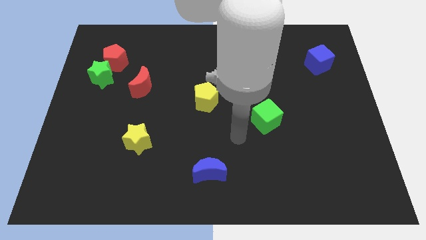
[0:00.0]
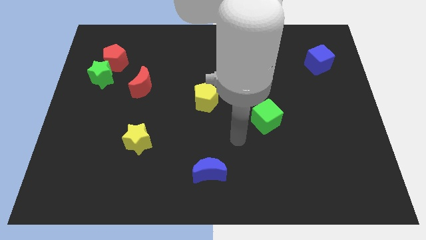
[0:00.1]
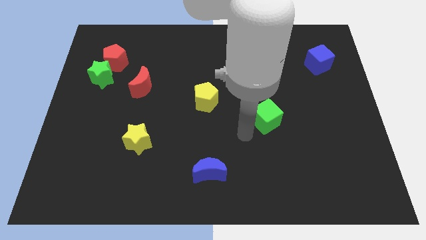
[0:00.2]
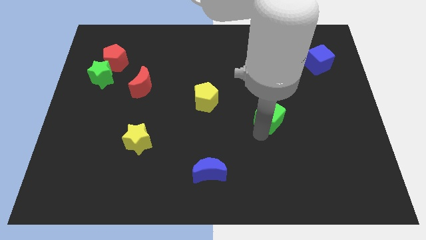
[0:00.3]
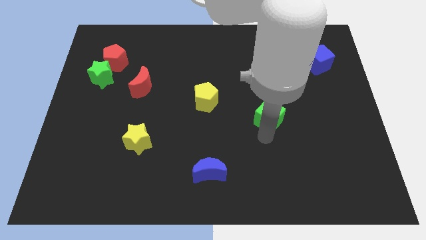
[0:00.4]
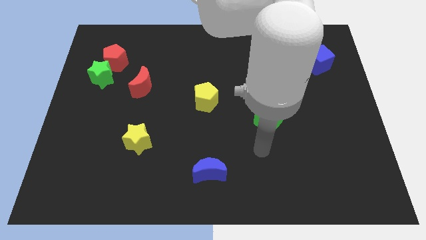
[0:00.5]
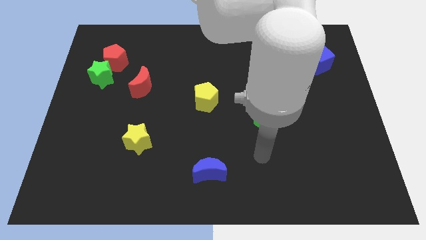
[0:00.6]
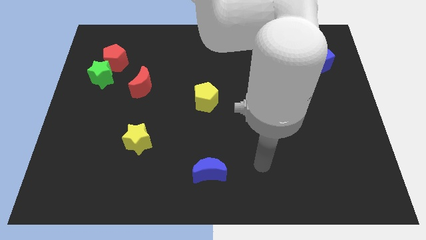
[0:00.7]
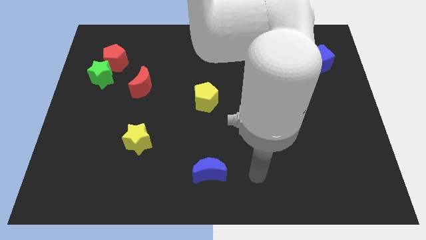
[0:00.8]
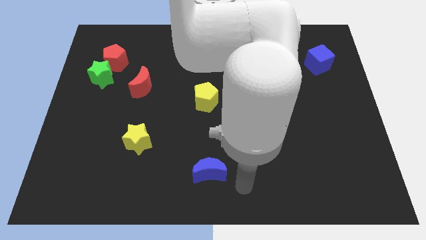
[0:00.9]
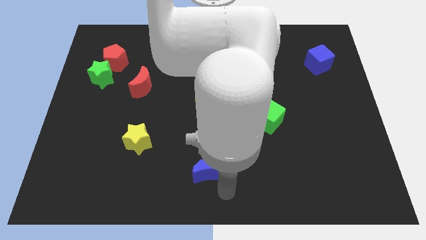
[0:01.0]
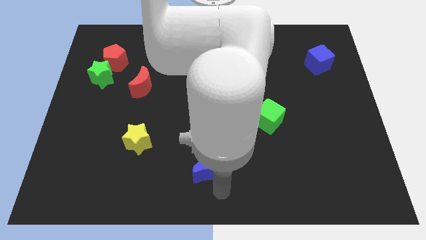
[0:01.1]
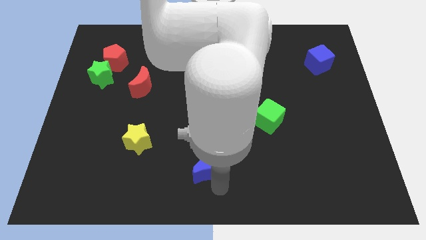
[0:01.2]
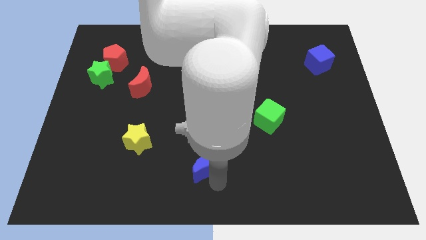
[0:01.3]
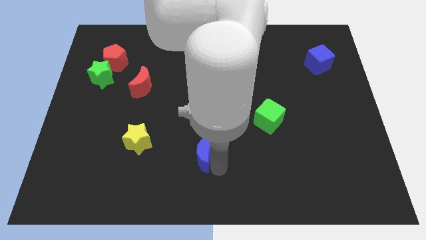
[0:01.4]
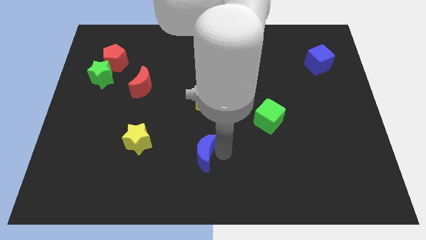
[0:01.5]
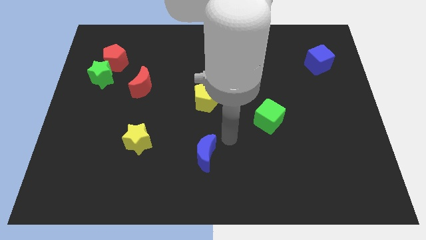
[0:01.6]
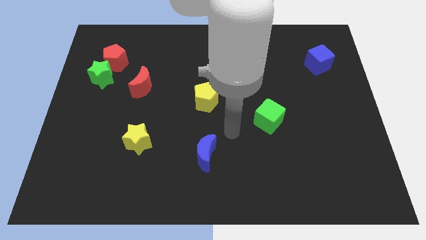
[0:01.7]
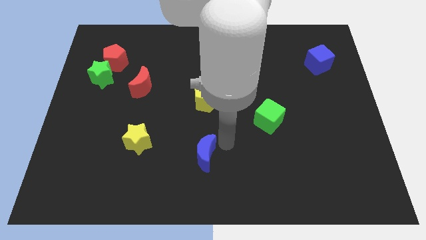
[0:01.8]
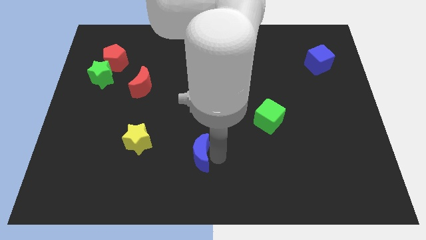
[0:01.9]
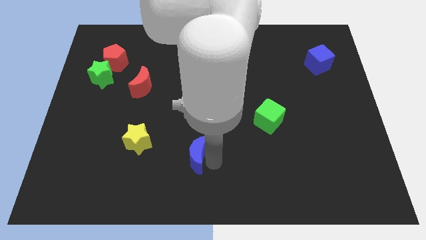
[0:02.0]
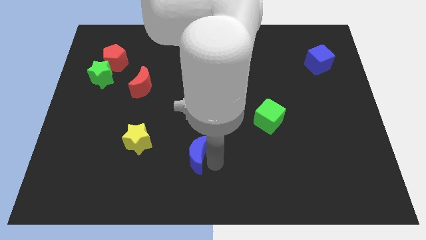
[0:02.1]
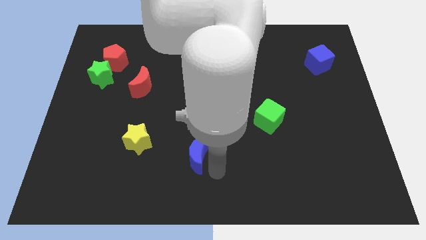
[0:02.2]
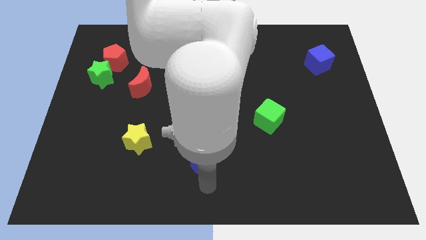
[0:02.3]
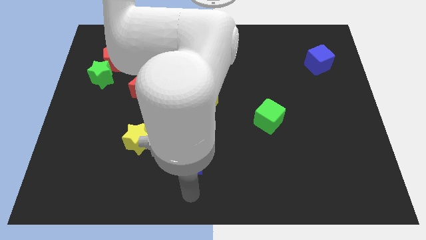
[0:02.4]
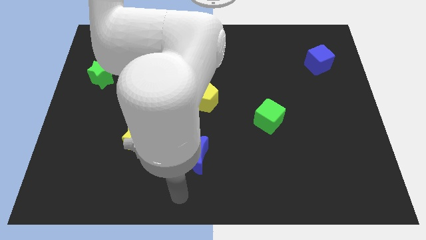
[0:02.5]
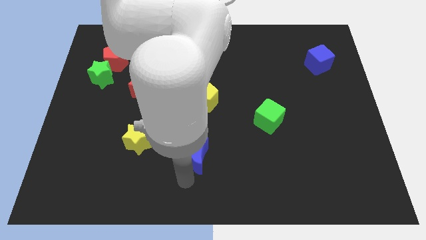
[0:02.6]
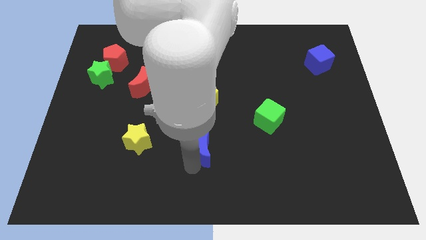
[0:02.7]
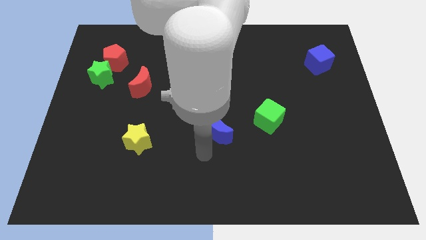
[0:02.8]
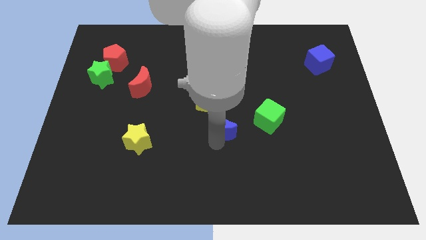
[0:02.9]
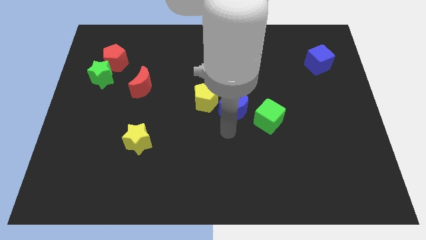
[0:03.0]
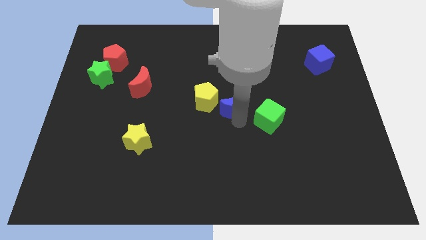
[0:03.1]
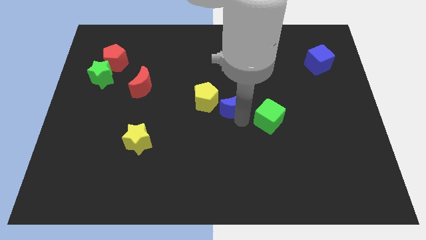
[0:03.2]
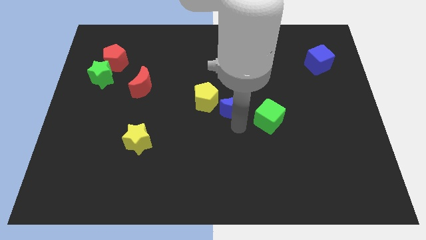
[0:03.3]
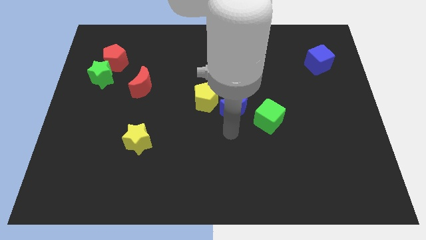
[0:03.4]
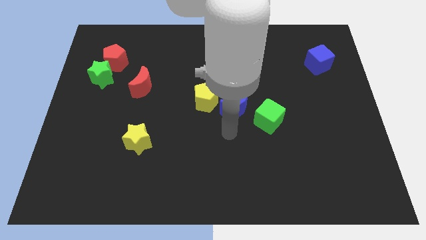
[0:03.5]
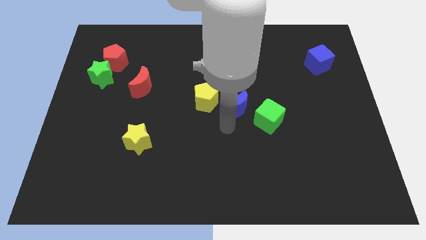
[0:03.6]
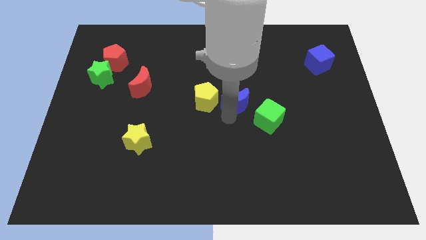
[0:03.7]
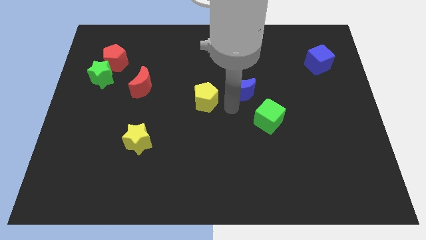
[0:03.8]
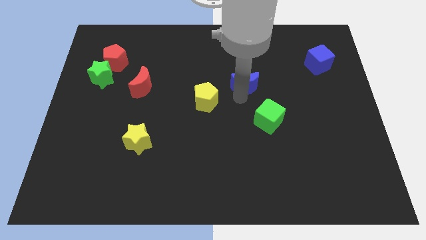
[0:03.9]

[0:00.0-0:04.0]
slightly touch the green cube

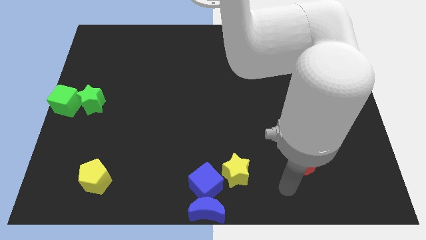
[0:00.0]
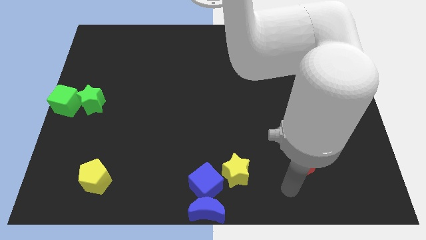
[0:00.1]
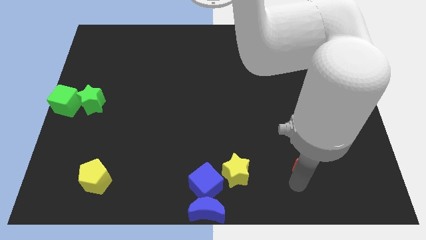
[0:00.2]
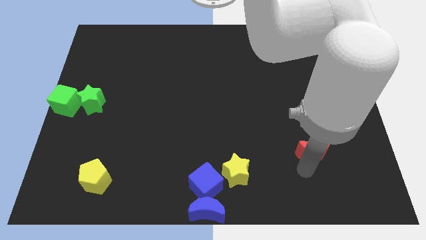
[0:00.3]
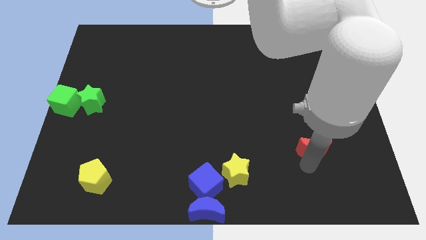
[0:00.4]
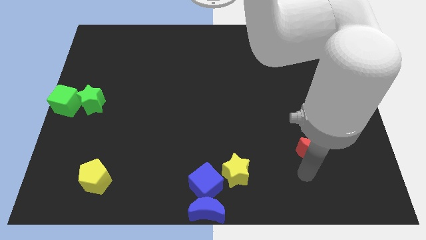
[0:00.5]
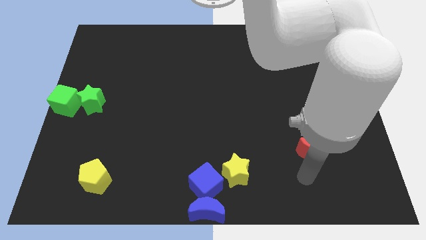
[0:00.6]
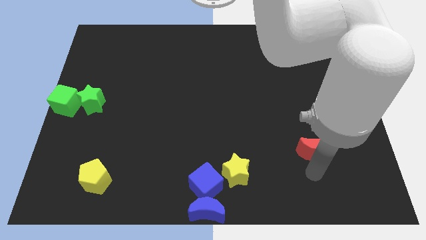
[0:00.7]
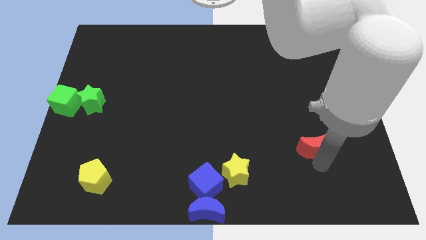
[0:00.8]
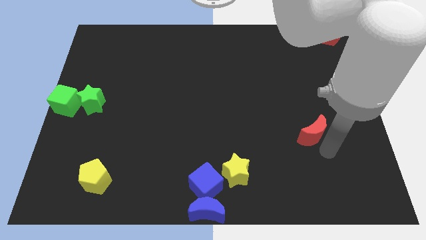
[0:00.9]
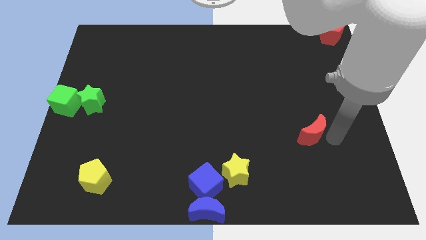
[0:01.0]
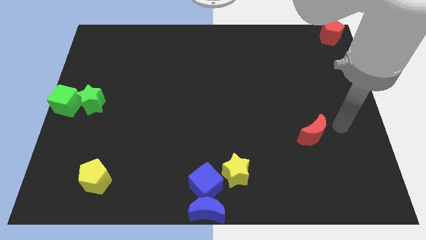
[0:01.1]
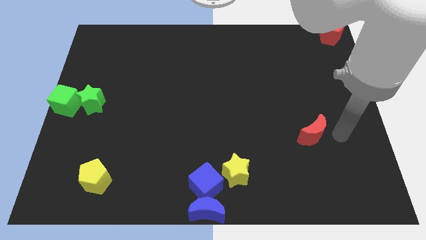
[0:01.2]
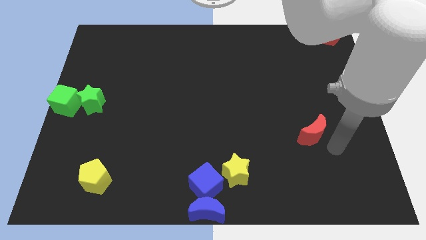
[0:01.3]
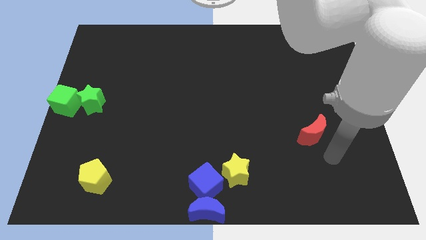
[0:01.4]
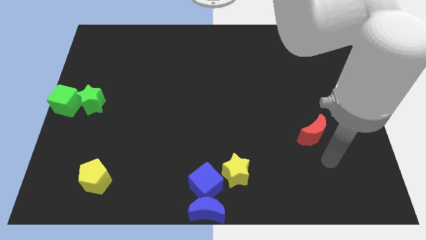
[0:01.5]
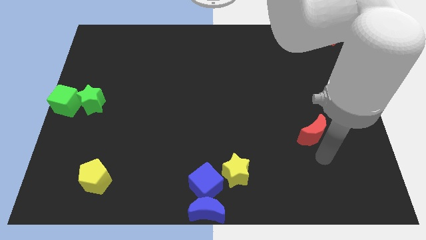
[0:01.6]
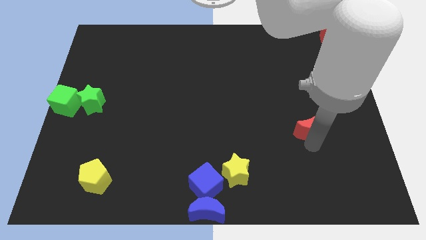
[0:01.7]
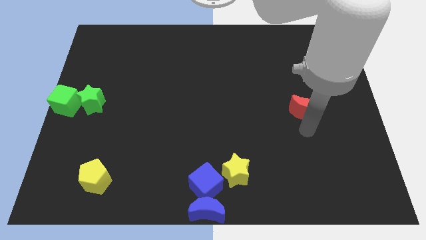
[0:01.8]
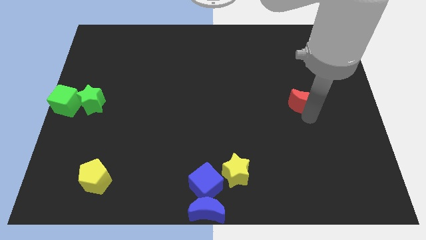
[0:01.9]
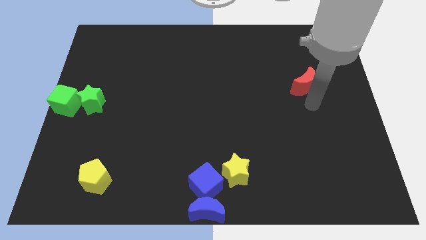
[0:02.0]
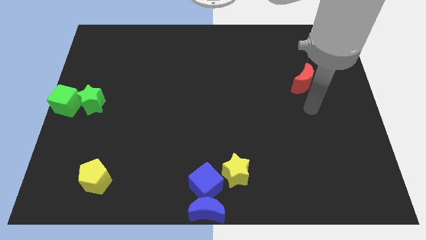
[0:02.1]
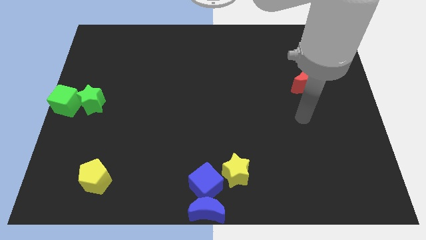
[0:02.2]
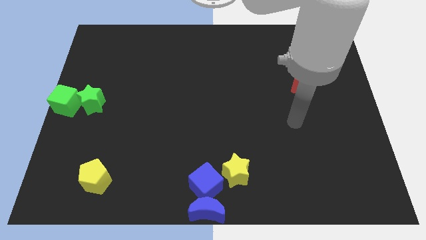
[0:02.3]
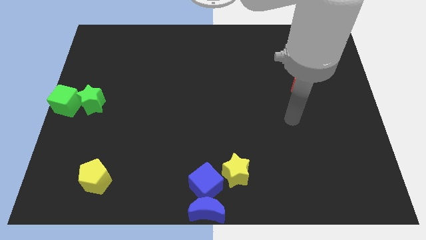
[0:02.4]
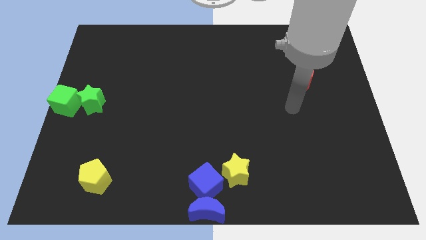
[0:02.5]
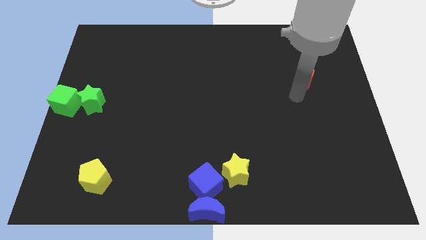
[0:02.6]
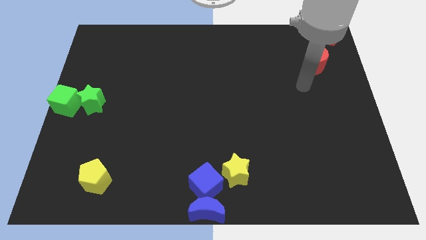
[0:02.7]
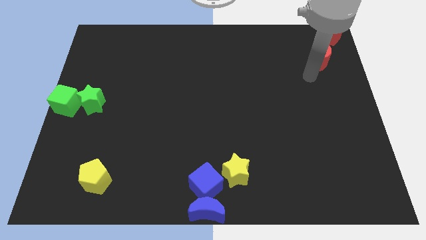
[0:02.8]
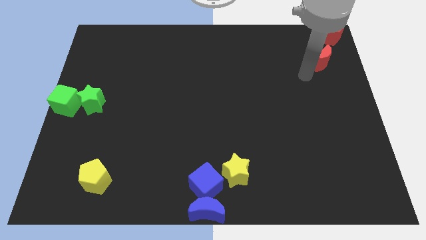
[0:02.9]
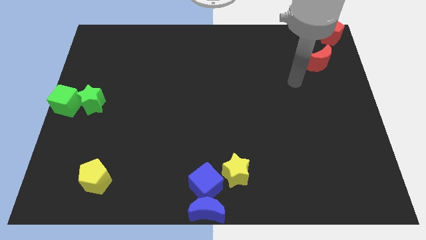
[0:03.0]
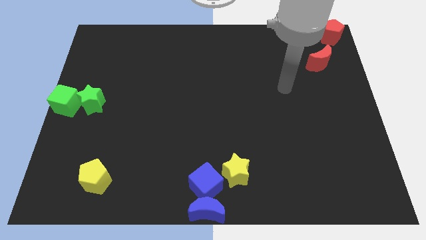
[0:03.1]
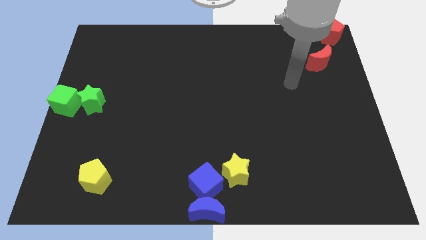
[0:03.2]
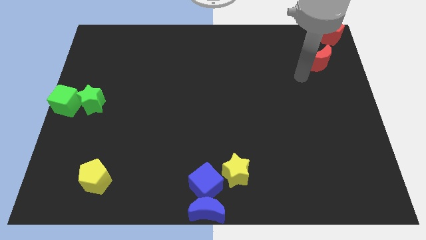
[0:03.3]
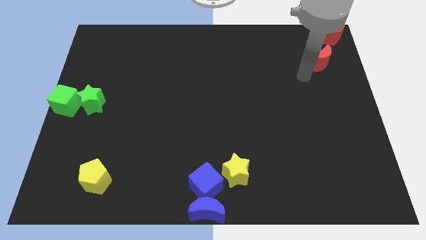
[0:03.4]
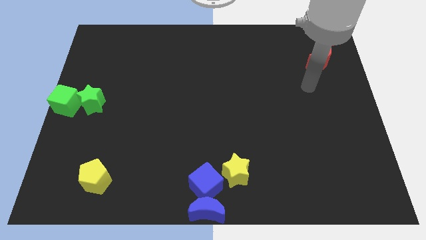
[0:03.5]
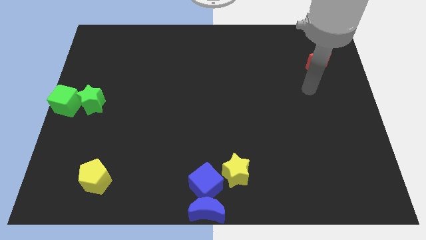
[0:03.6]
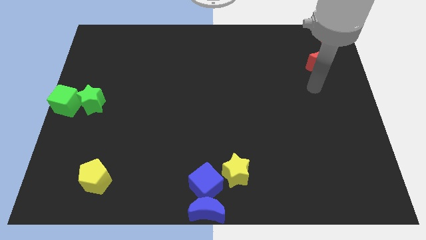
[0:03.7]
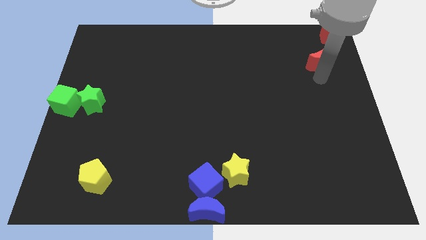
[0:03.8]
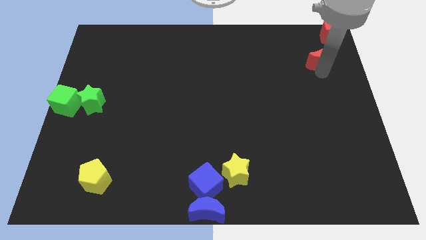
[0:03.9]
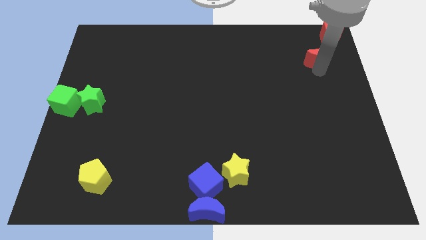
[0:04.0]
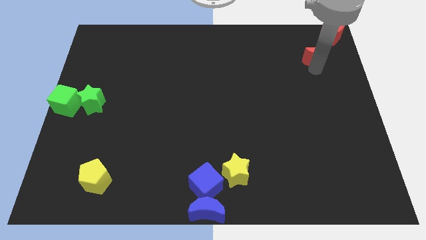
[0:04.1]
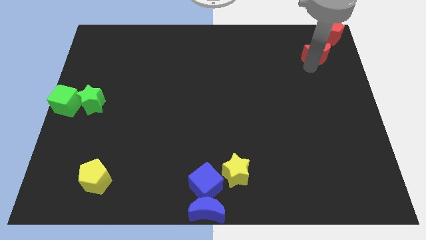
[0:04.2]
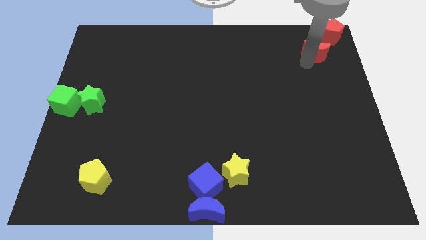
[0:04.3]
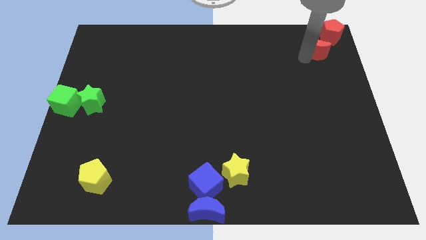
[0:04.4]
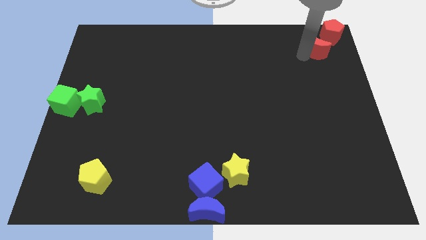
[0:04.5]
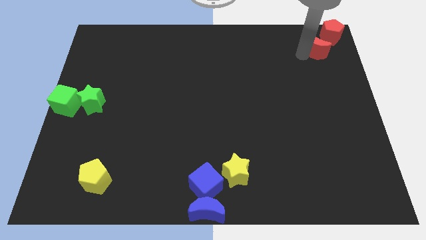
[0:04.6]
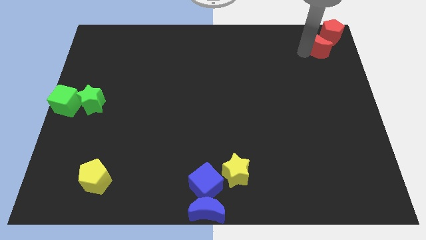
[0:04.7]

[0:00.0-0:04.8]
push the red crescent into the red pentagon
